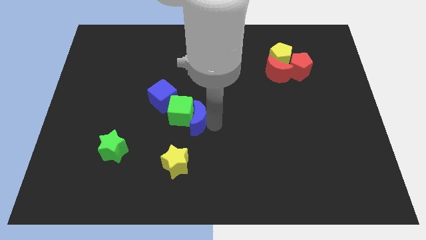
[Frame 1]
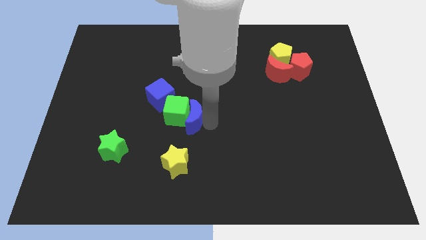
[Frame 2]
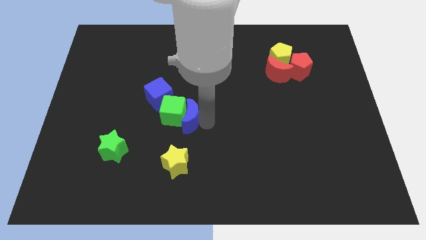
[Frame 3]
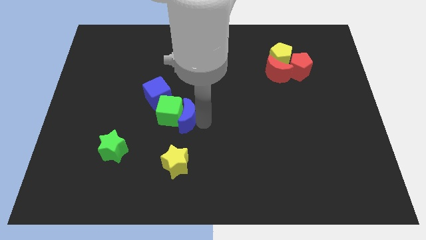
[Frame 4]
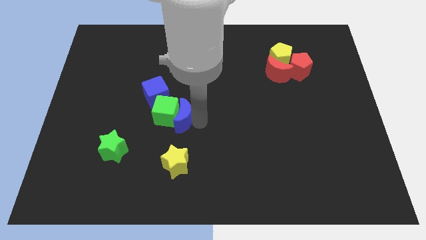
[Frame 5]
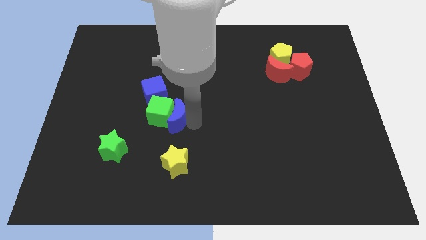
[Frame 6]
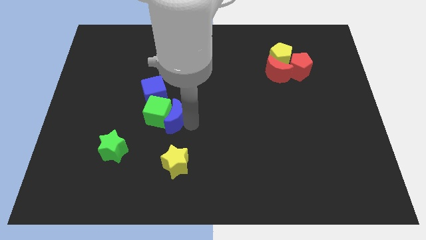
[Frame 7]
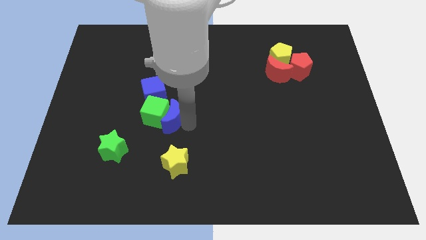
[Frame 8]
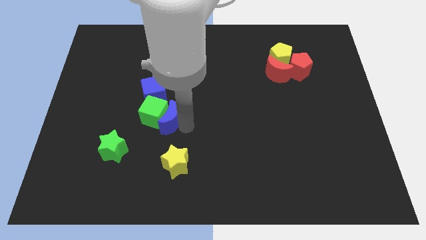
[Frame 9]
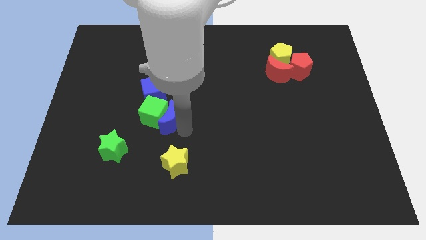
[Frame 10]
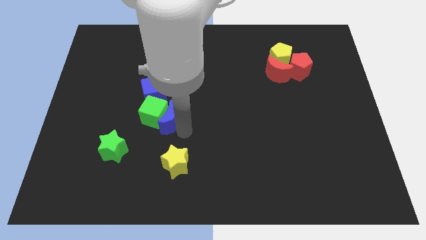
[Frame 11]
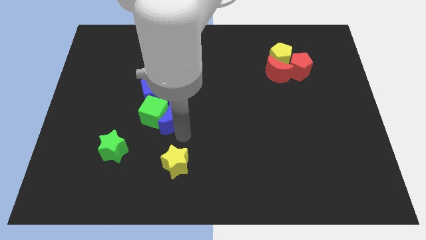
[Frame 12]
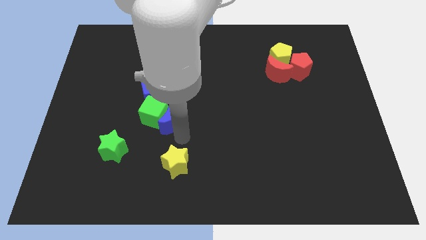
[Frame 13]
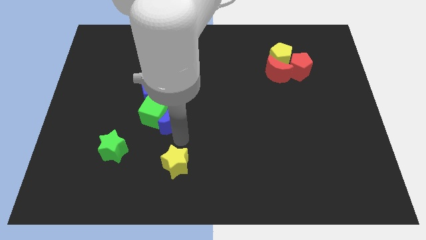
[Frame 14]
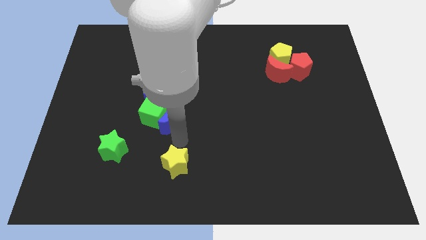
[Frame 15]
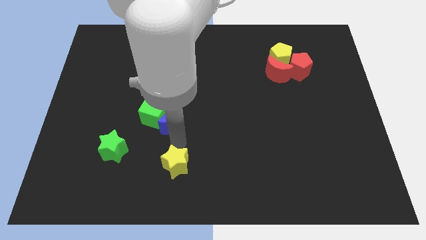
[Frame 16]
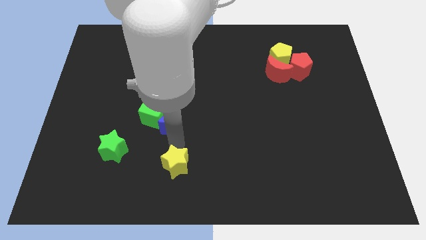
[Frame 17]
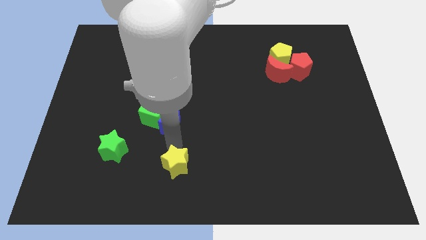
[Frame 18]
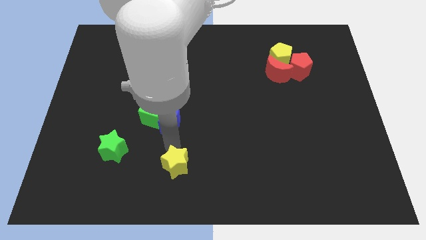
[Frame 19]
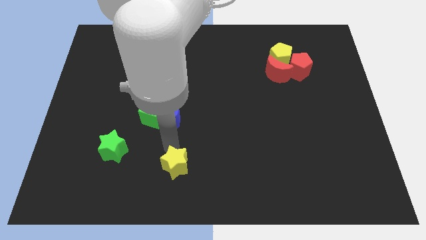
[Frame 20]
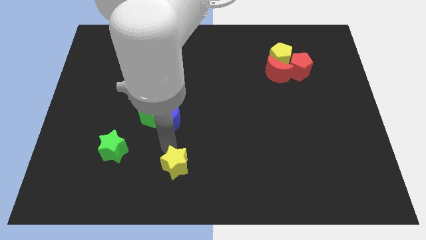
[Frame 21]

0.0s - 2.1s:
push the blue moon and green cube below the blue cube

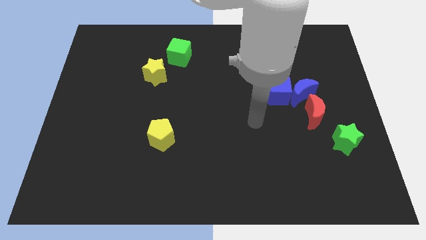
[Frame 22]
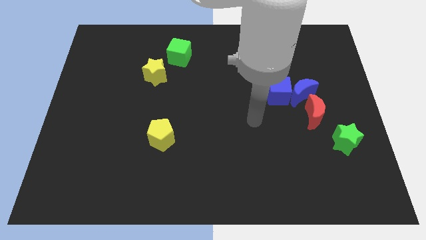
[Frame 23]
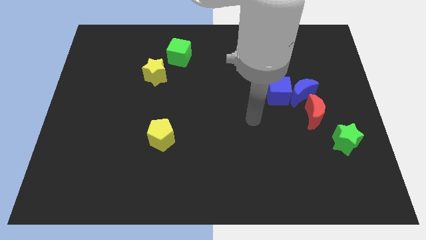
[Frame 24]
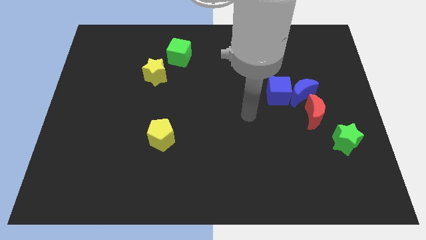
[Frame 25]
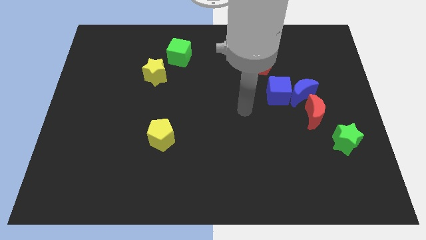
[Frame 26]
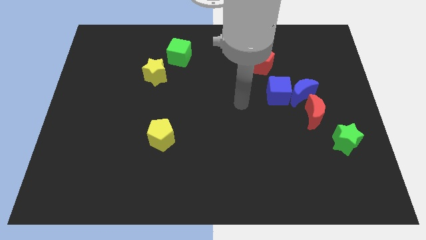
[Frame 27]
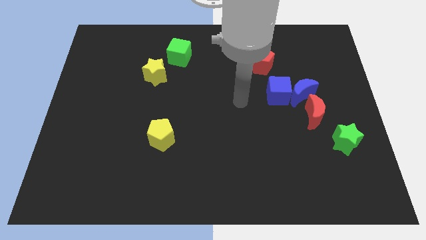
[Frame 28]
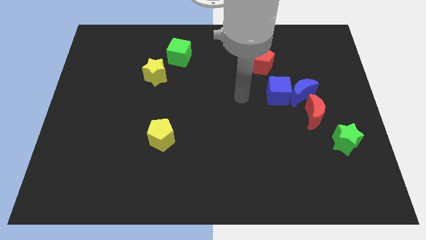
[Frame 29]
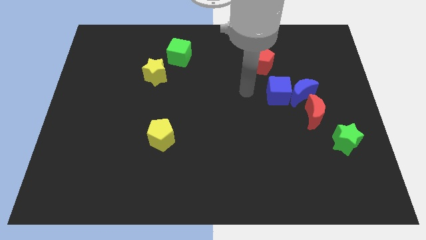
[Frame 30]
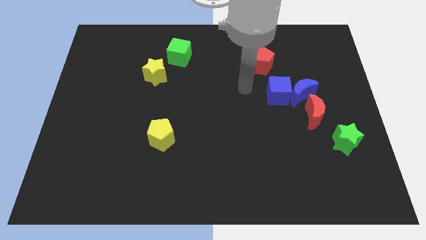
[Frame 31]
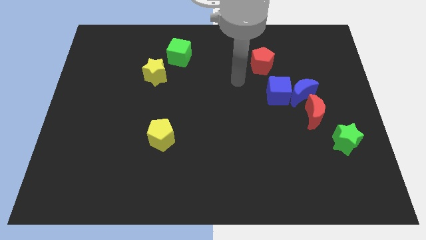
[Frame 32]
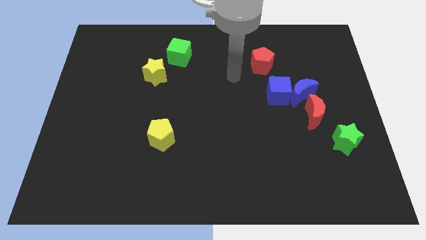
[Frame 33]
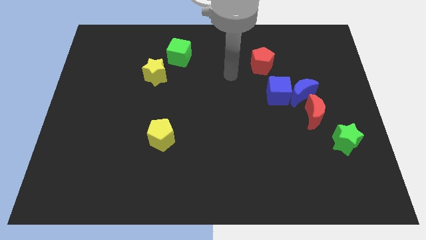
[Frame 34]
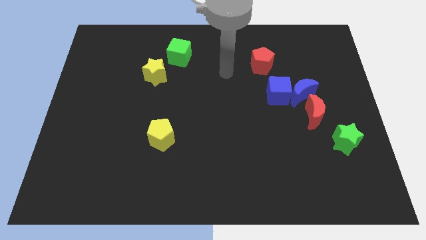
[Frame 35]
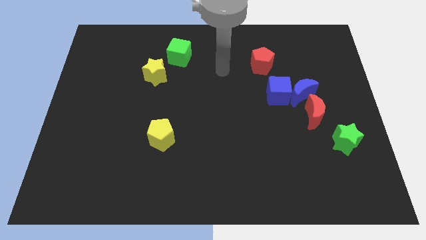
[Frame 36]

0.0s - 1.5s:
move the arm towards the top center of the board

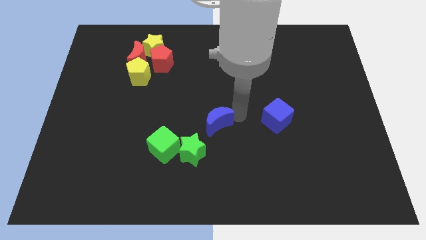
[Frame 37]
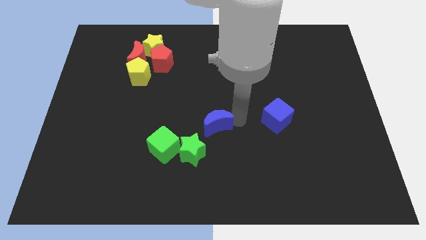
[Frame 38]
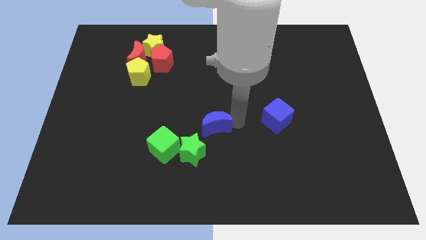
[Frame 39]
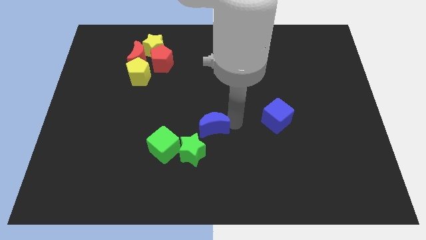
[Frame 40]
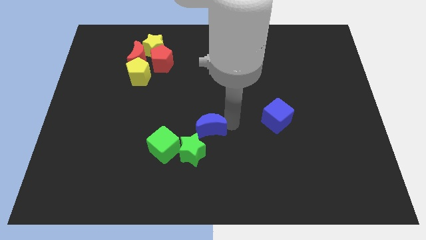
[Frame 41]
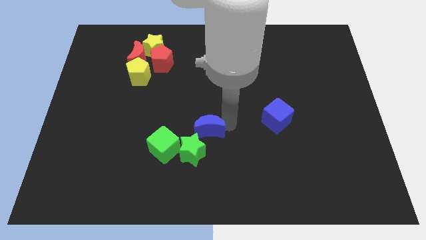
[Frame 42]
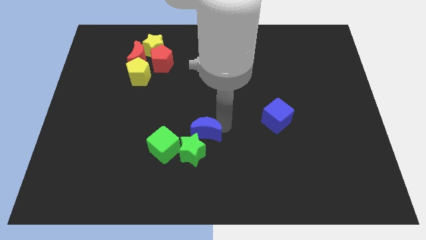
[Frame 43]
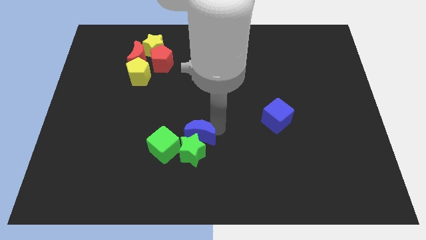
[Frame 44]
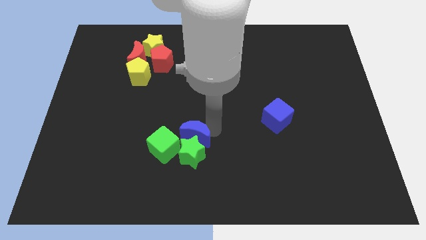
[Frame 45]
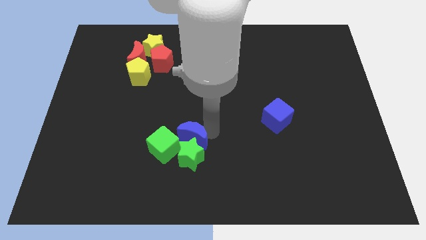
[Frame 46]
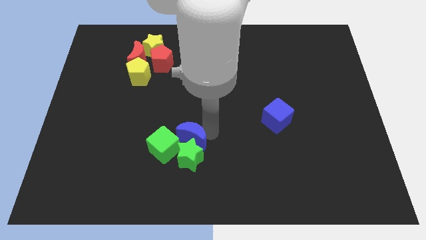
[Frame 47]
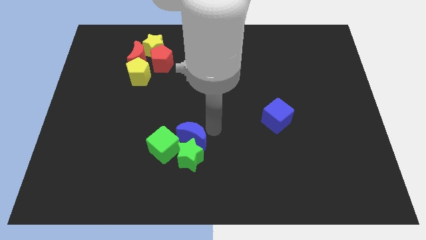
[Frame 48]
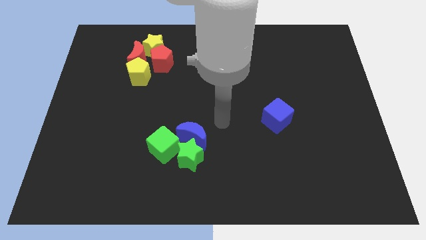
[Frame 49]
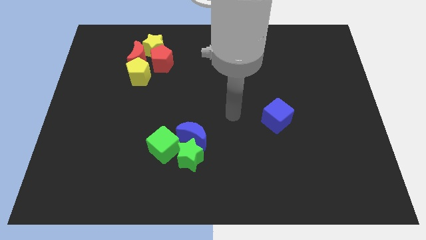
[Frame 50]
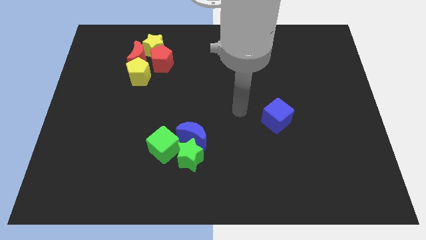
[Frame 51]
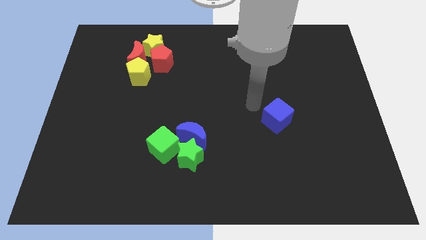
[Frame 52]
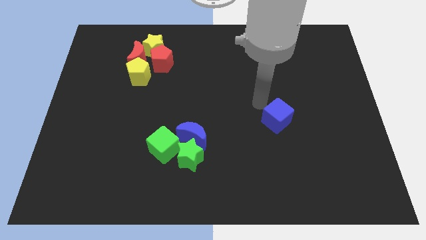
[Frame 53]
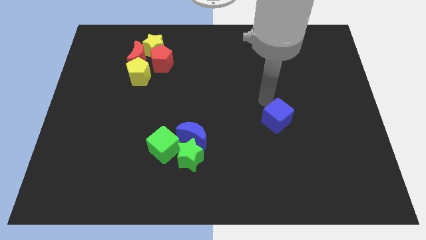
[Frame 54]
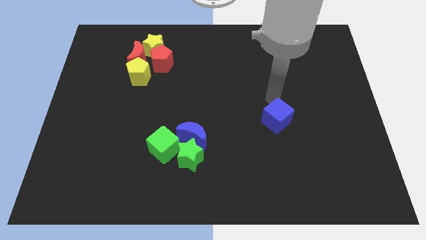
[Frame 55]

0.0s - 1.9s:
place the blue moon into the group of blocks

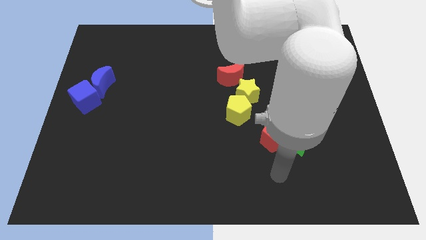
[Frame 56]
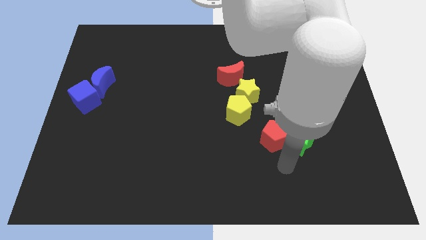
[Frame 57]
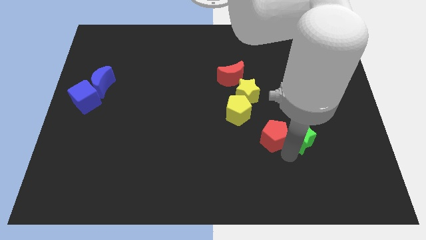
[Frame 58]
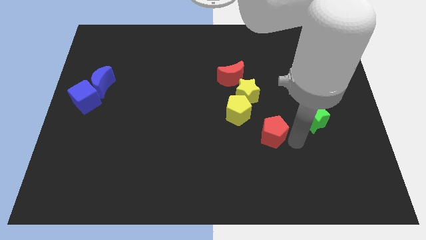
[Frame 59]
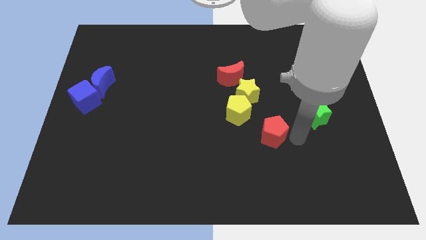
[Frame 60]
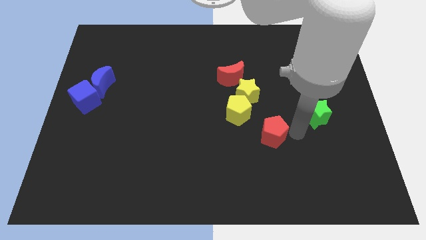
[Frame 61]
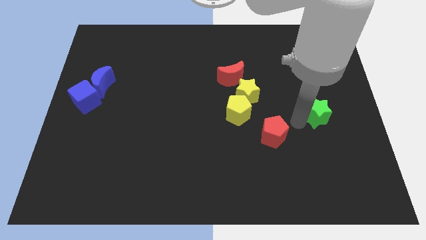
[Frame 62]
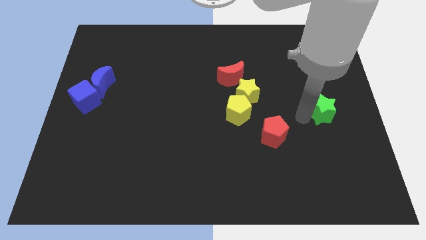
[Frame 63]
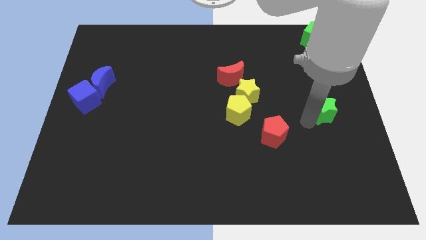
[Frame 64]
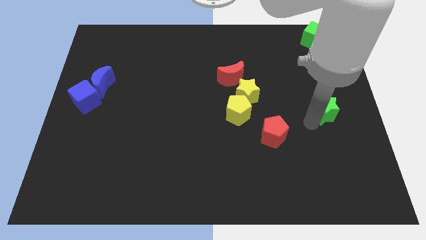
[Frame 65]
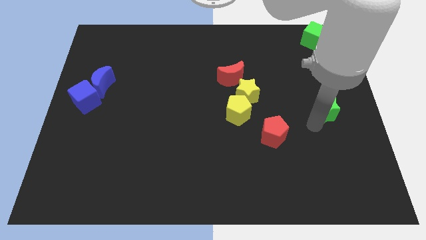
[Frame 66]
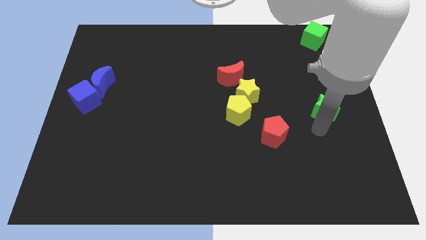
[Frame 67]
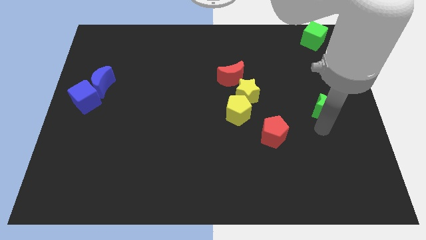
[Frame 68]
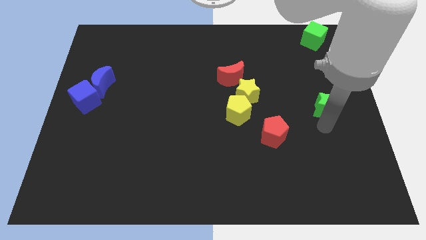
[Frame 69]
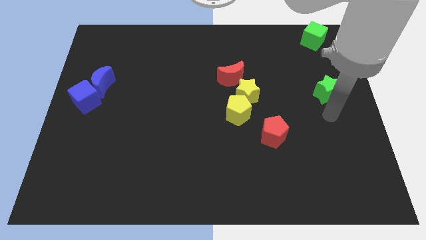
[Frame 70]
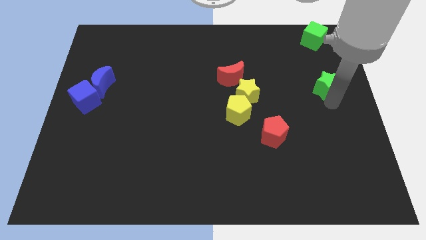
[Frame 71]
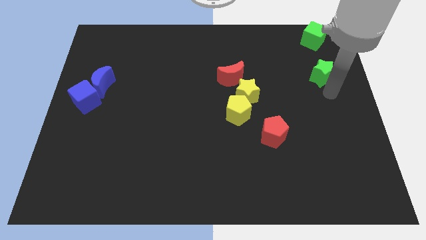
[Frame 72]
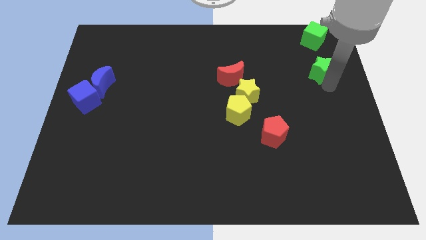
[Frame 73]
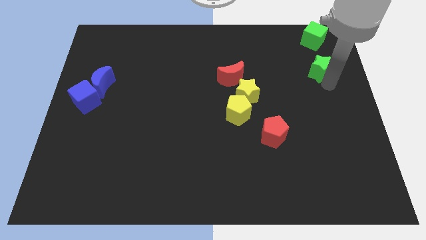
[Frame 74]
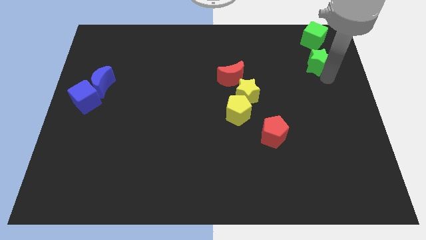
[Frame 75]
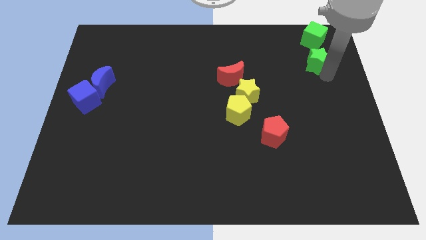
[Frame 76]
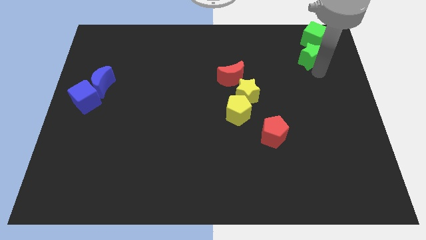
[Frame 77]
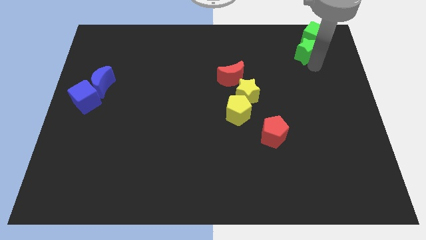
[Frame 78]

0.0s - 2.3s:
push the green star towards the diagonal bottom left corner of the green cube

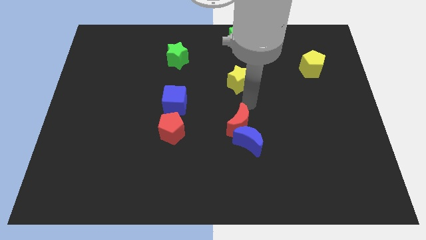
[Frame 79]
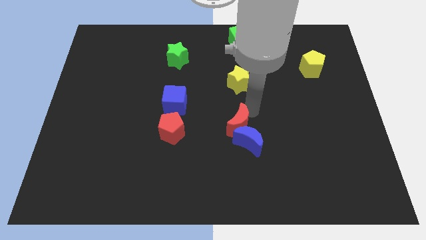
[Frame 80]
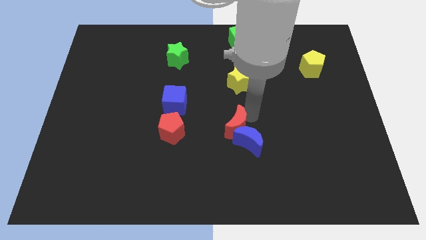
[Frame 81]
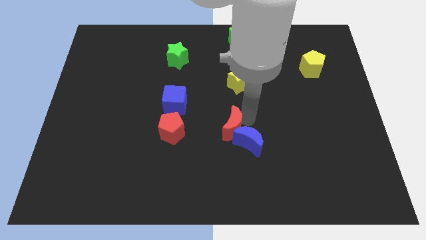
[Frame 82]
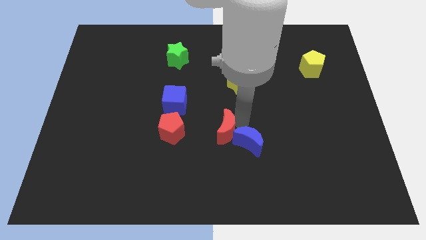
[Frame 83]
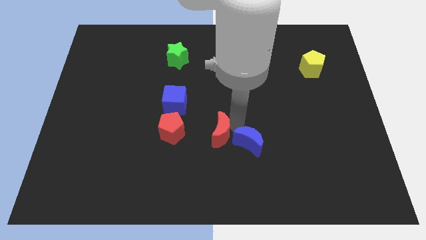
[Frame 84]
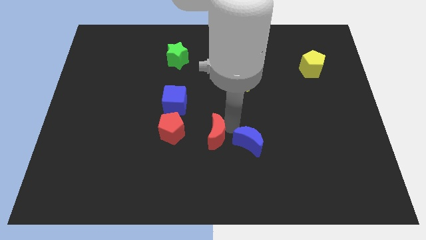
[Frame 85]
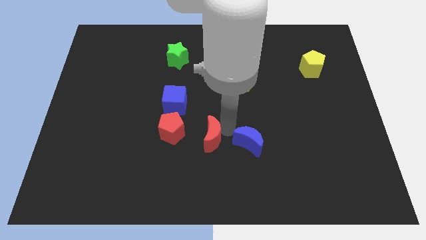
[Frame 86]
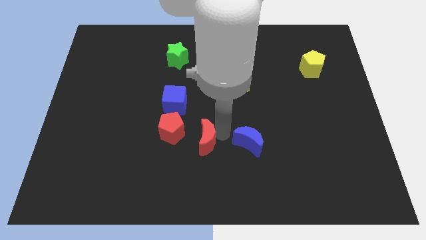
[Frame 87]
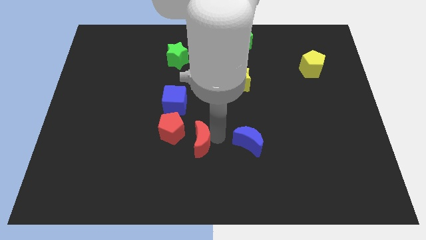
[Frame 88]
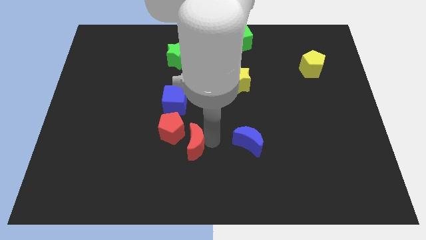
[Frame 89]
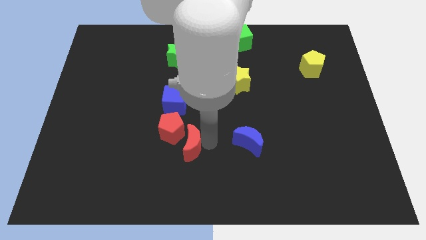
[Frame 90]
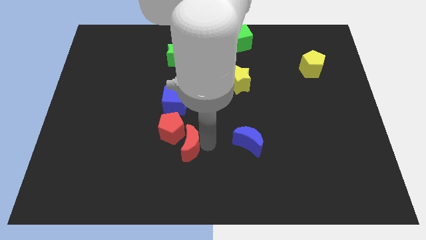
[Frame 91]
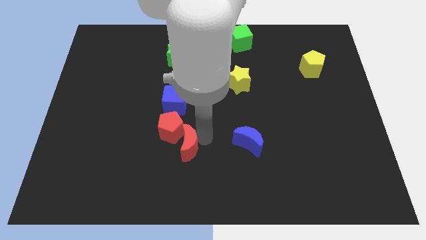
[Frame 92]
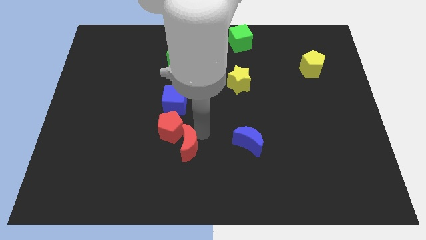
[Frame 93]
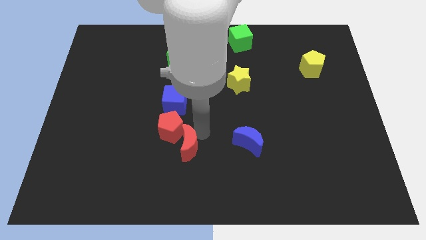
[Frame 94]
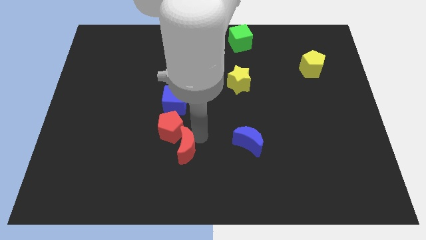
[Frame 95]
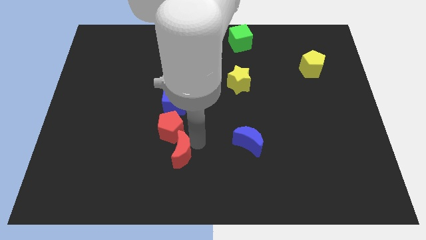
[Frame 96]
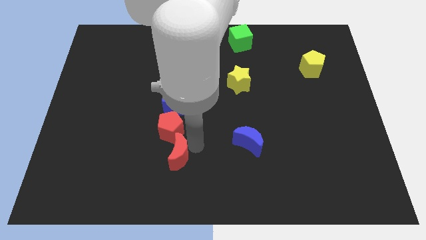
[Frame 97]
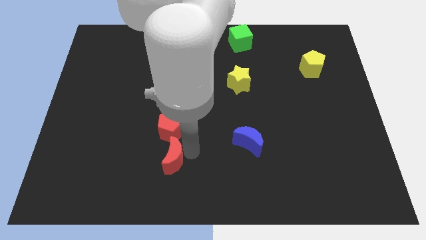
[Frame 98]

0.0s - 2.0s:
place red moon below red pentagon
